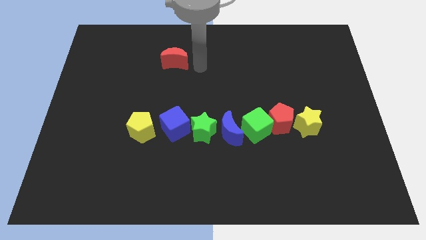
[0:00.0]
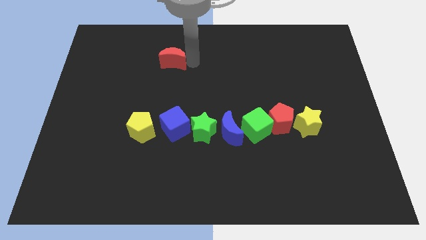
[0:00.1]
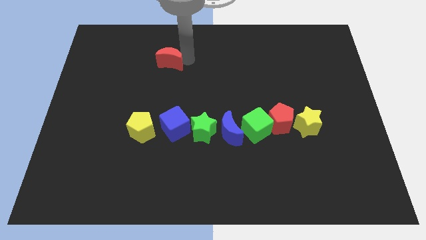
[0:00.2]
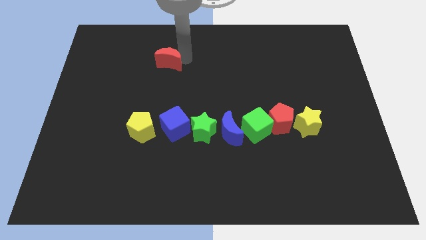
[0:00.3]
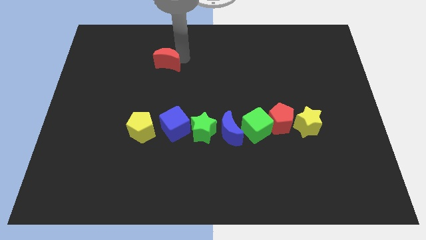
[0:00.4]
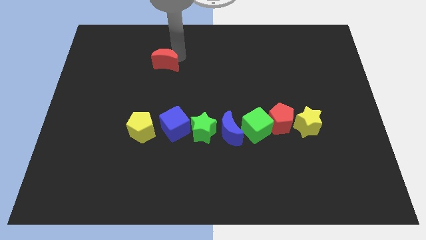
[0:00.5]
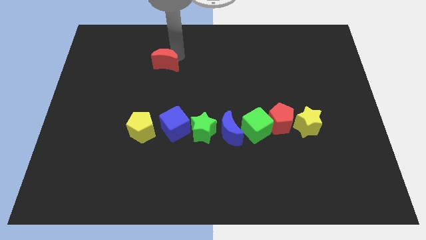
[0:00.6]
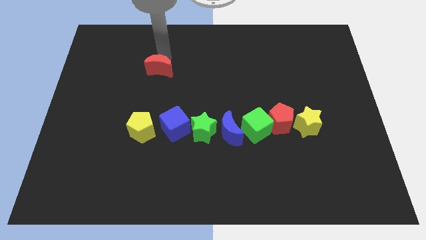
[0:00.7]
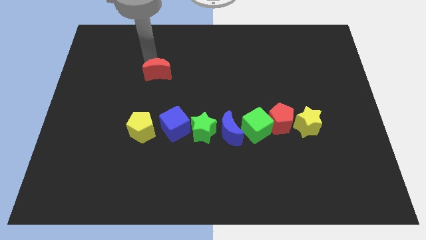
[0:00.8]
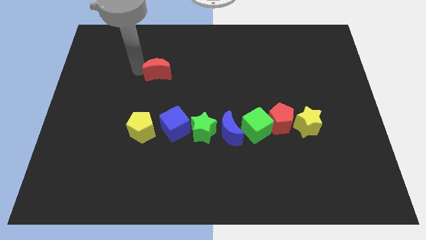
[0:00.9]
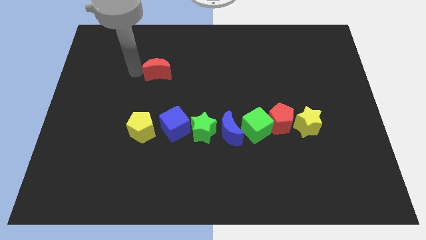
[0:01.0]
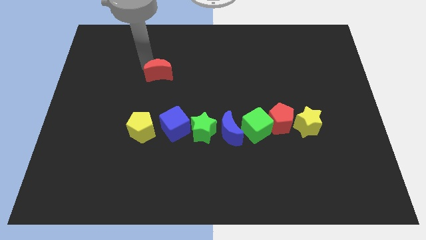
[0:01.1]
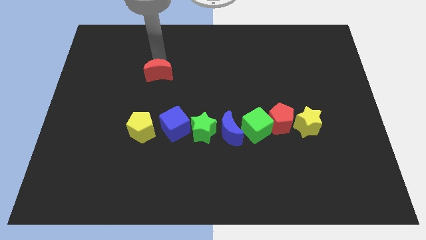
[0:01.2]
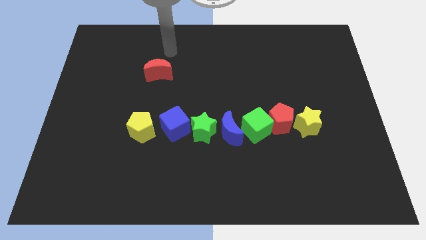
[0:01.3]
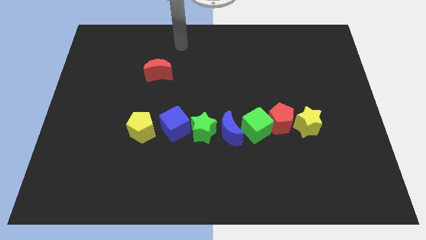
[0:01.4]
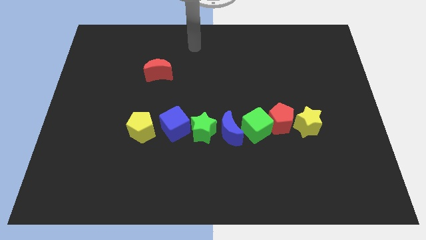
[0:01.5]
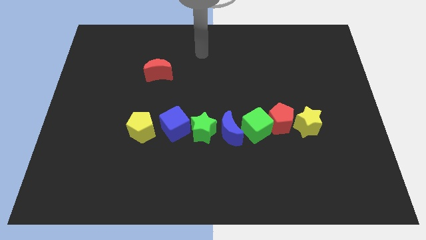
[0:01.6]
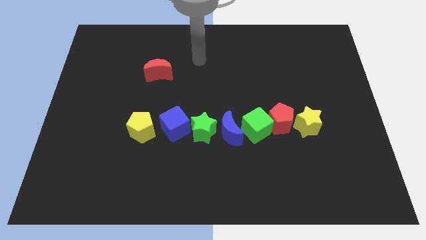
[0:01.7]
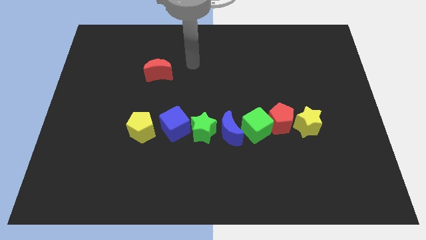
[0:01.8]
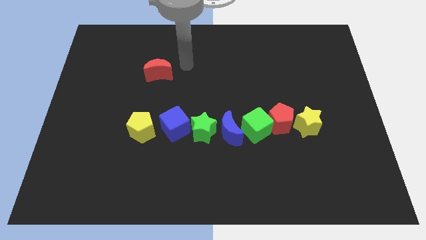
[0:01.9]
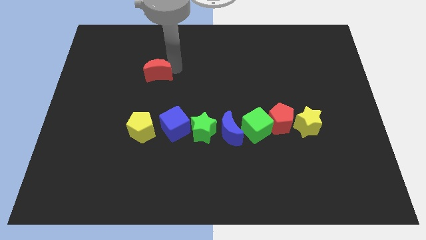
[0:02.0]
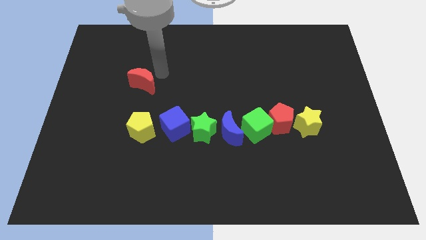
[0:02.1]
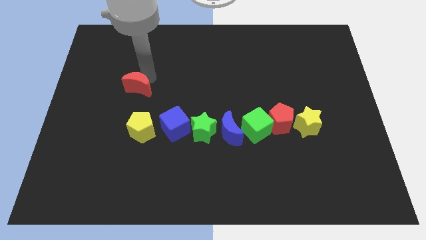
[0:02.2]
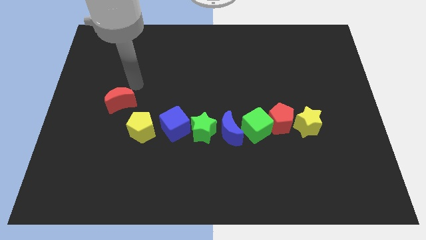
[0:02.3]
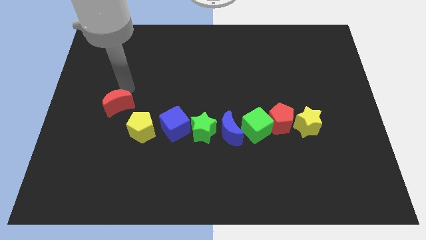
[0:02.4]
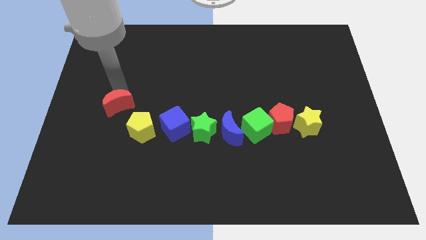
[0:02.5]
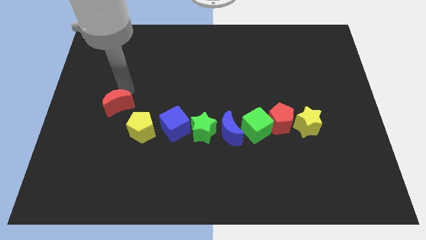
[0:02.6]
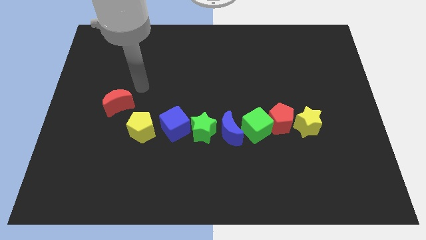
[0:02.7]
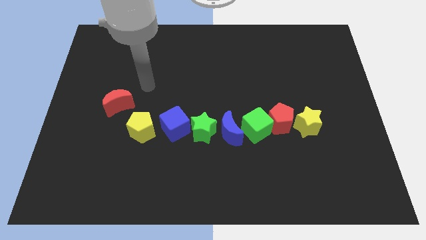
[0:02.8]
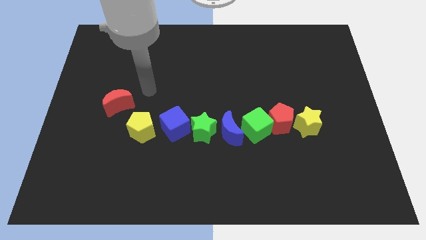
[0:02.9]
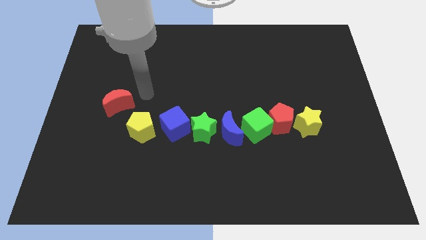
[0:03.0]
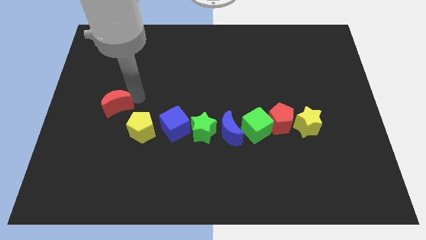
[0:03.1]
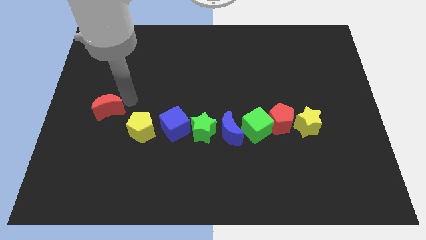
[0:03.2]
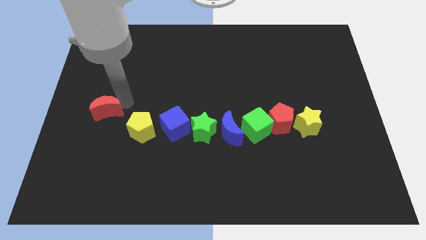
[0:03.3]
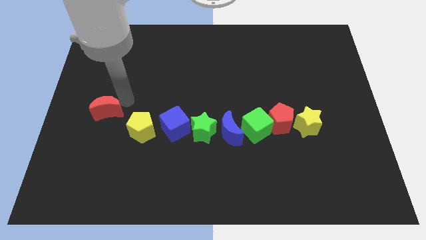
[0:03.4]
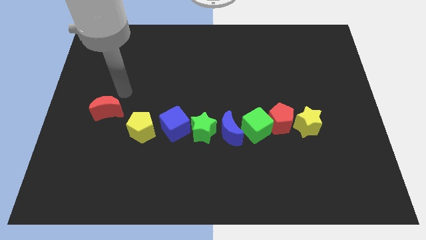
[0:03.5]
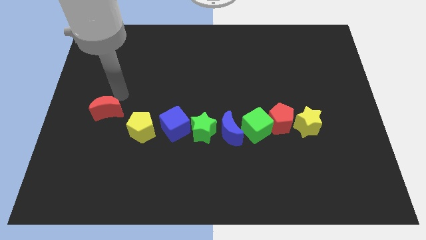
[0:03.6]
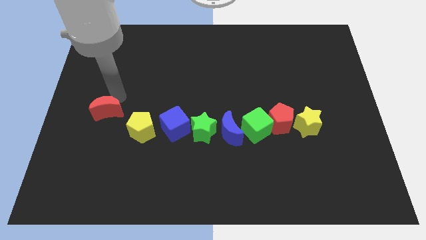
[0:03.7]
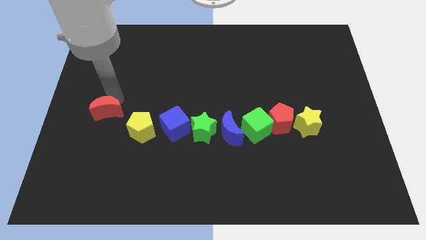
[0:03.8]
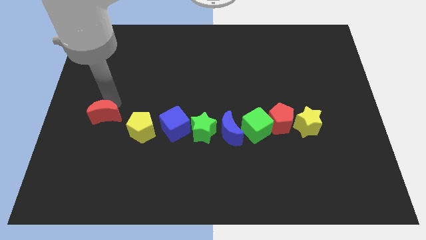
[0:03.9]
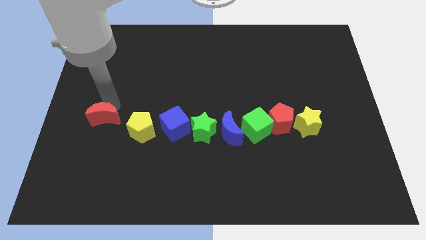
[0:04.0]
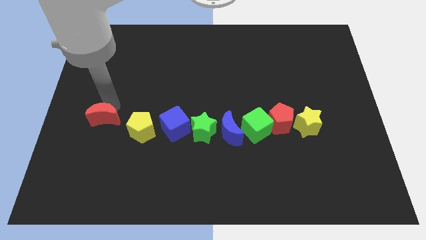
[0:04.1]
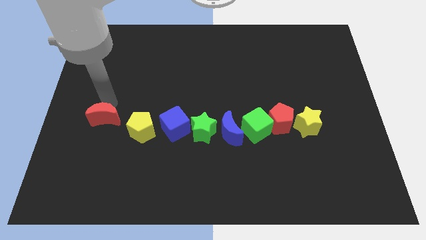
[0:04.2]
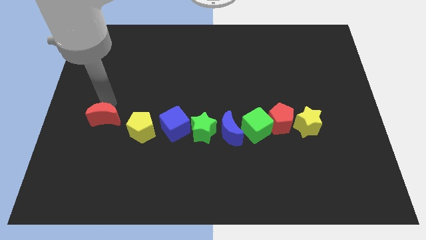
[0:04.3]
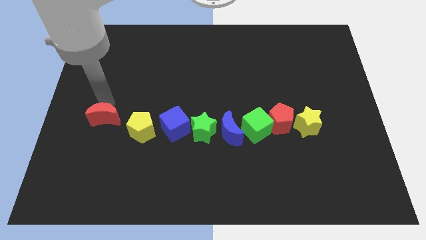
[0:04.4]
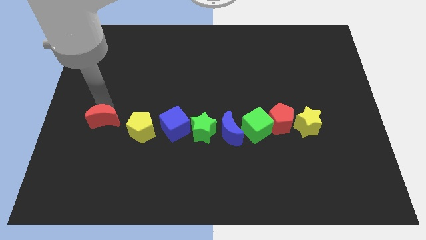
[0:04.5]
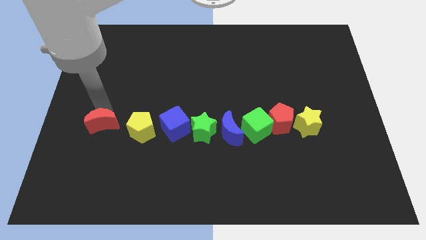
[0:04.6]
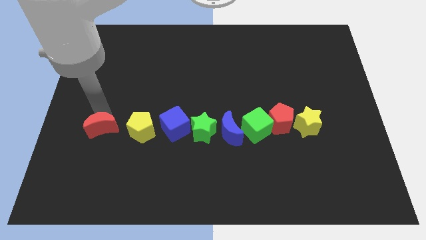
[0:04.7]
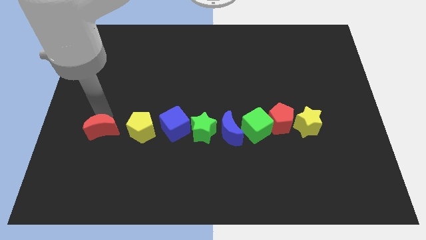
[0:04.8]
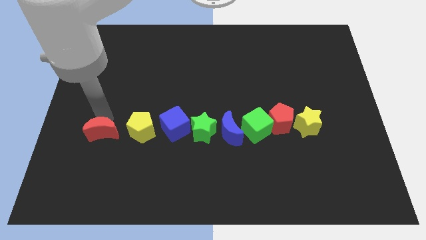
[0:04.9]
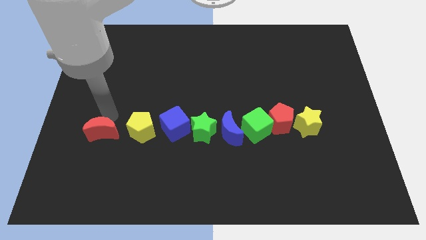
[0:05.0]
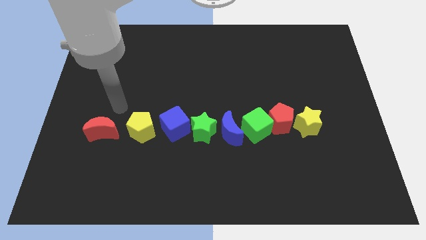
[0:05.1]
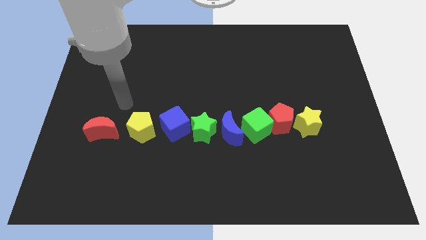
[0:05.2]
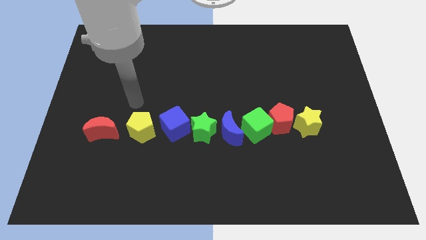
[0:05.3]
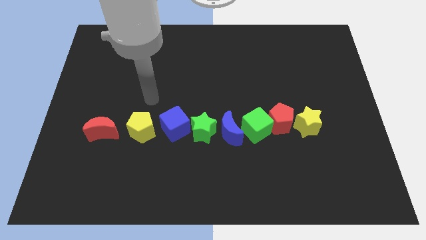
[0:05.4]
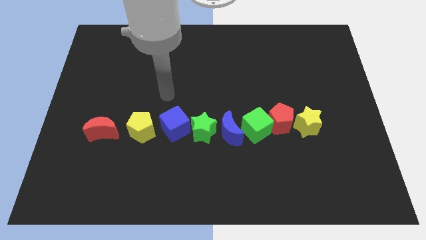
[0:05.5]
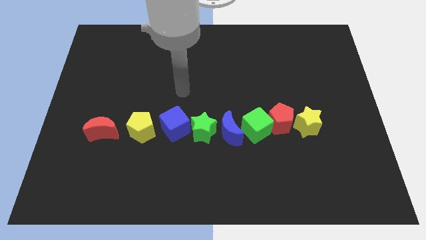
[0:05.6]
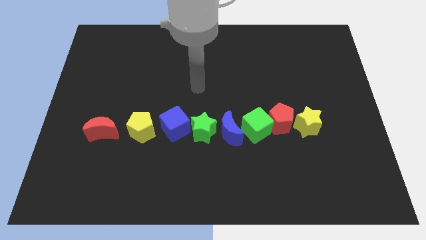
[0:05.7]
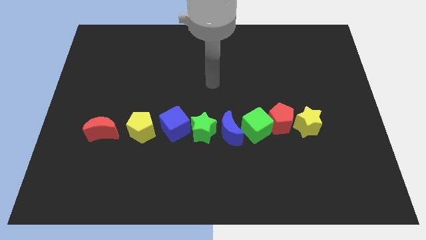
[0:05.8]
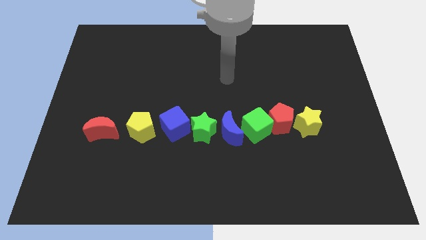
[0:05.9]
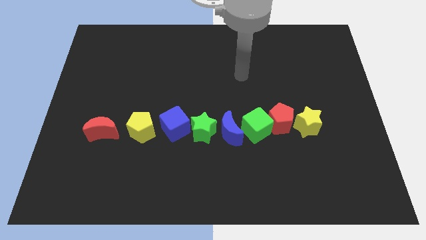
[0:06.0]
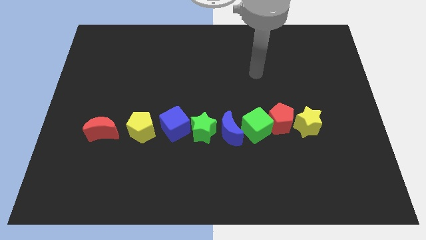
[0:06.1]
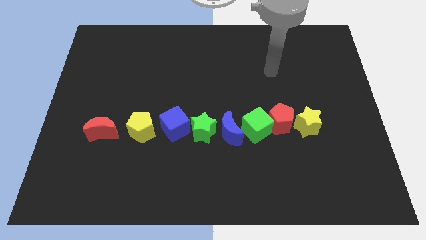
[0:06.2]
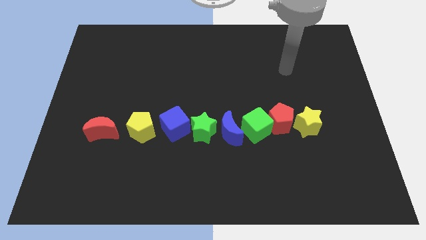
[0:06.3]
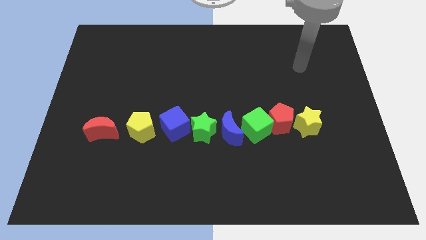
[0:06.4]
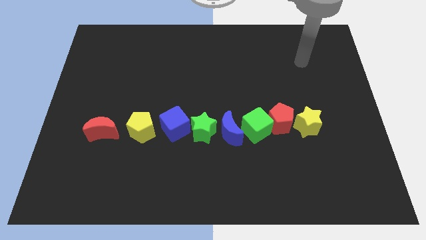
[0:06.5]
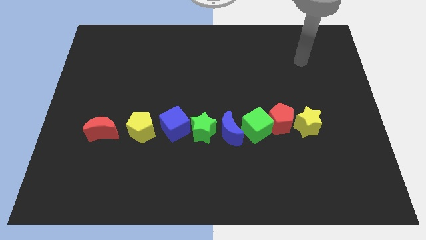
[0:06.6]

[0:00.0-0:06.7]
place the red crescent beside the yellow pentagon

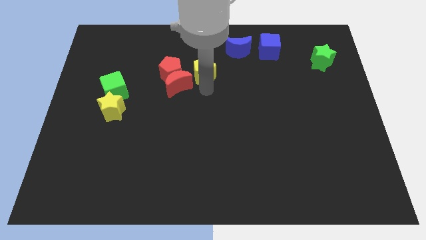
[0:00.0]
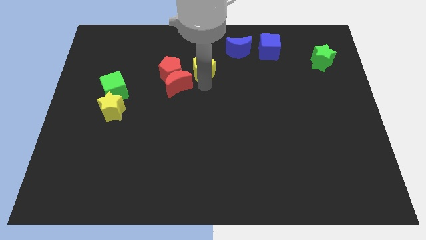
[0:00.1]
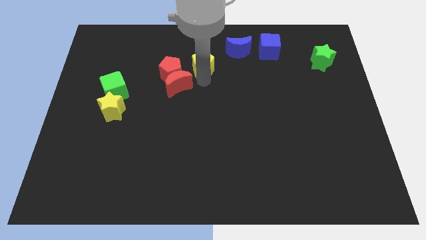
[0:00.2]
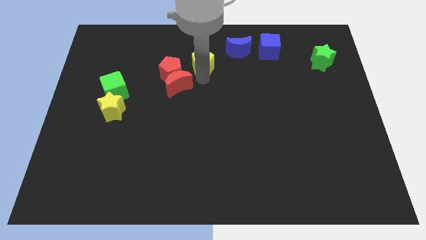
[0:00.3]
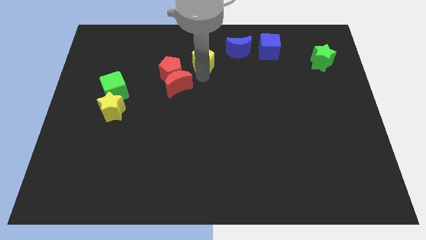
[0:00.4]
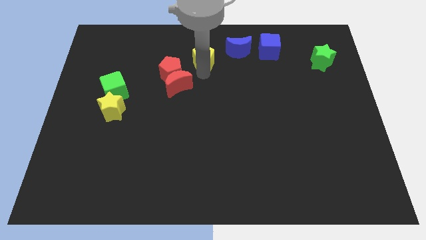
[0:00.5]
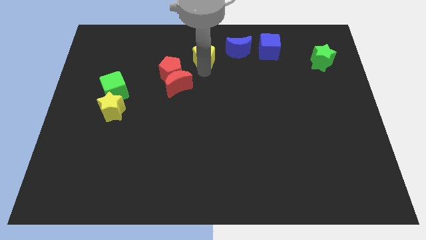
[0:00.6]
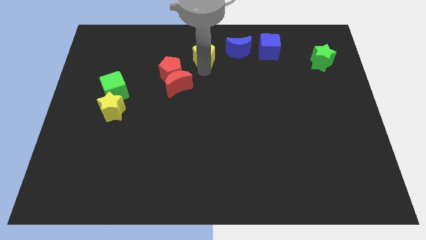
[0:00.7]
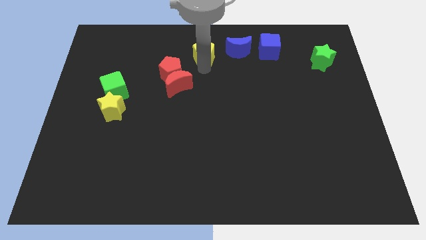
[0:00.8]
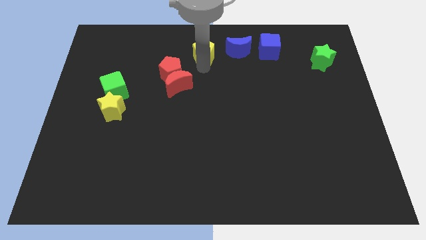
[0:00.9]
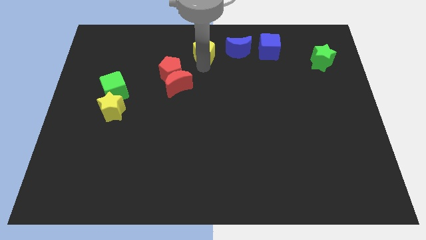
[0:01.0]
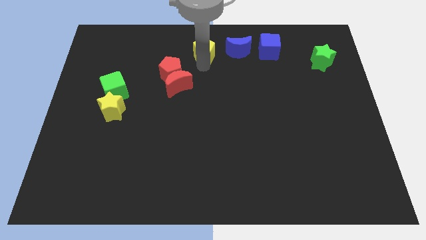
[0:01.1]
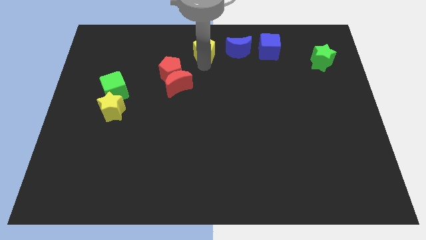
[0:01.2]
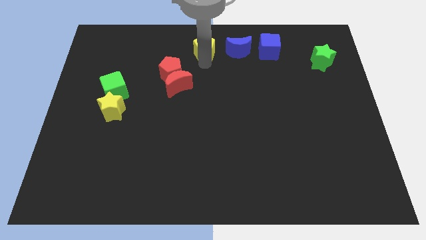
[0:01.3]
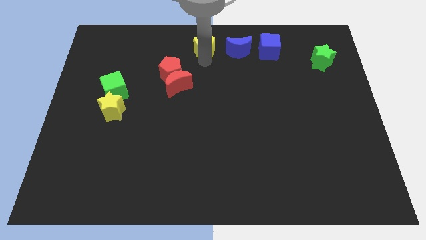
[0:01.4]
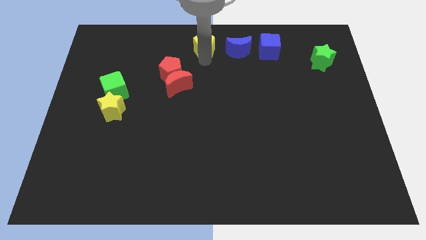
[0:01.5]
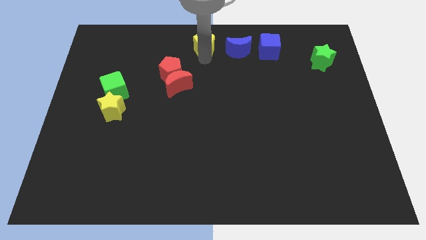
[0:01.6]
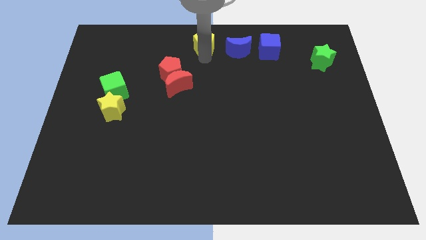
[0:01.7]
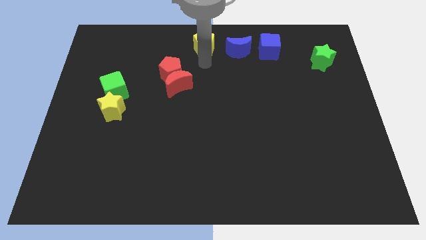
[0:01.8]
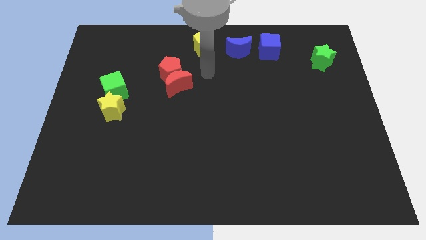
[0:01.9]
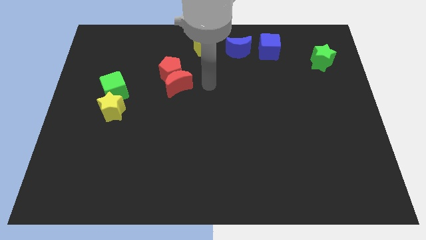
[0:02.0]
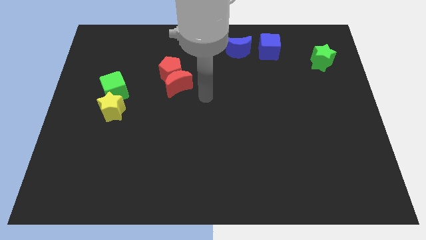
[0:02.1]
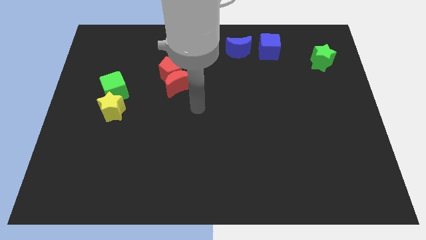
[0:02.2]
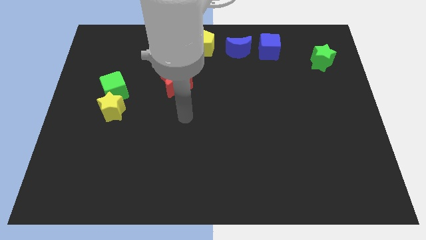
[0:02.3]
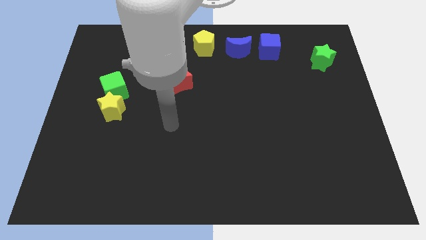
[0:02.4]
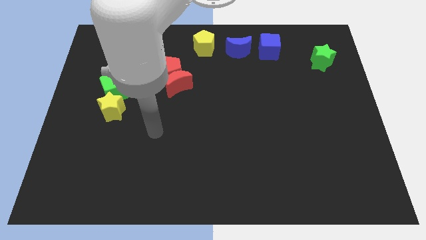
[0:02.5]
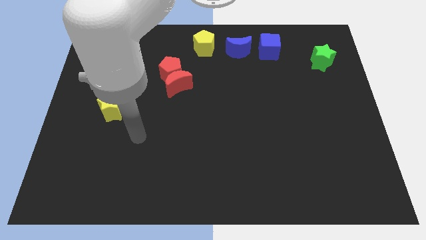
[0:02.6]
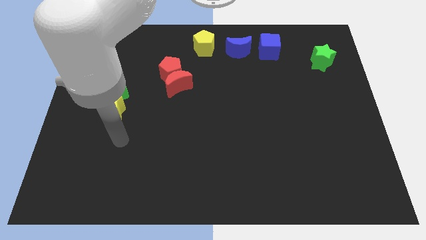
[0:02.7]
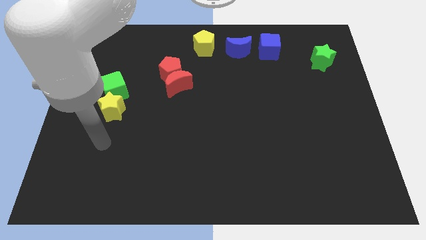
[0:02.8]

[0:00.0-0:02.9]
place the yellow pentagon towards the top centre of the board
